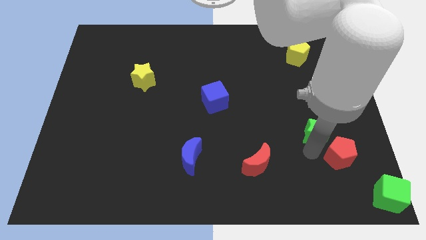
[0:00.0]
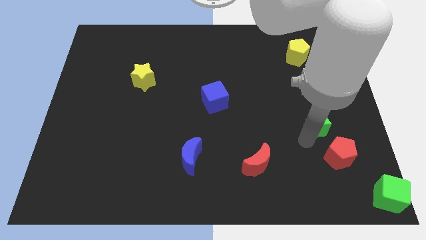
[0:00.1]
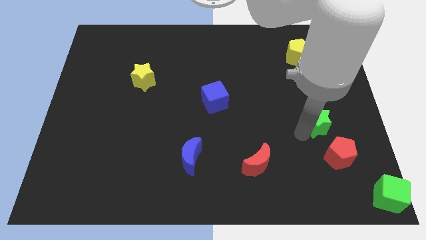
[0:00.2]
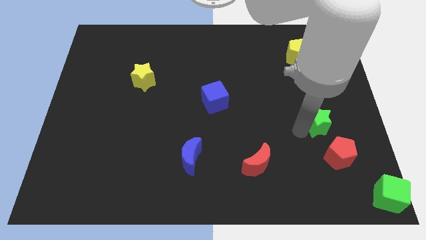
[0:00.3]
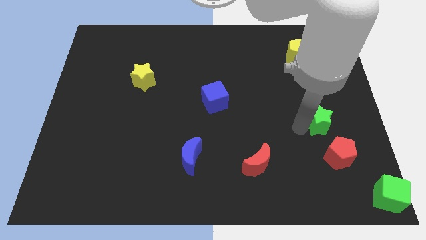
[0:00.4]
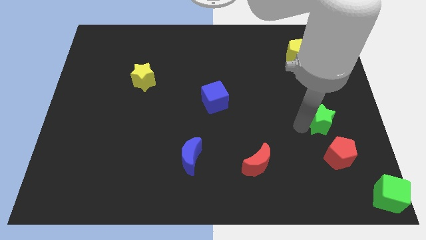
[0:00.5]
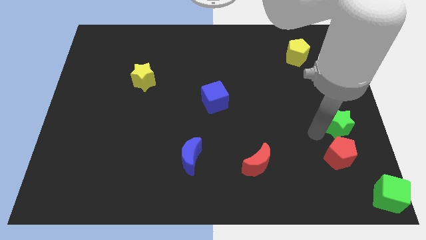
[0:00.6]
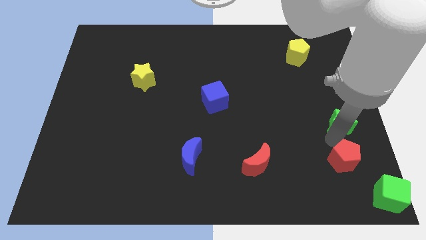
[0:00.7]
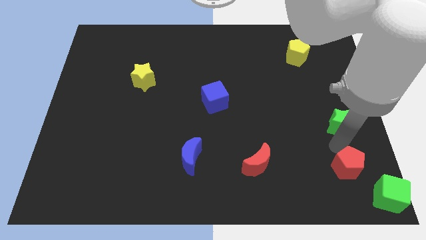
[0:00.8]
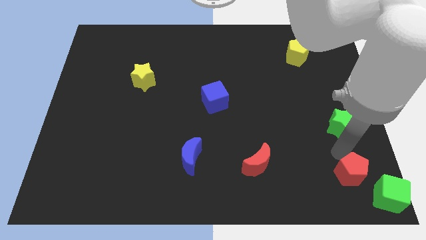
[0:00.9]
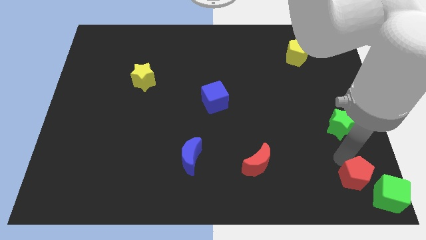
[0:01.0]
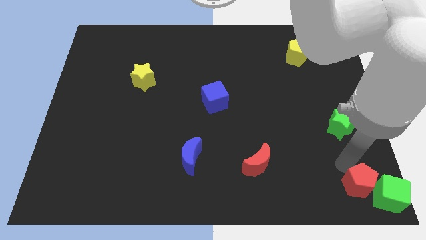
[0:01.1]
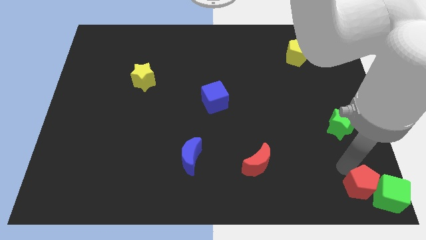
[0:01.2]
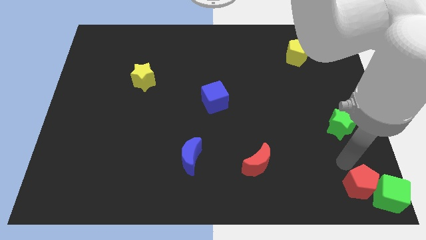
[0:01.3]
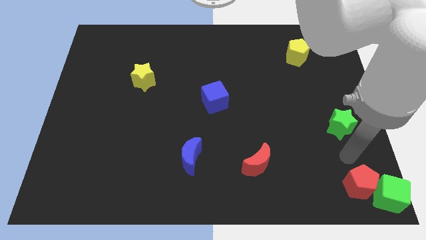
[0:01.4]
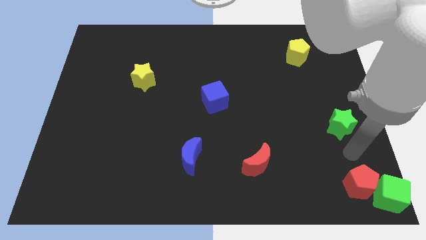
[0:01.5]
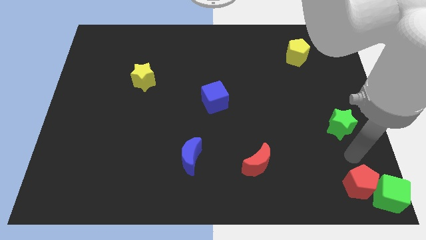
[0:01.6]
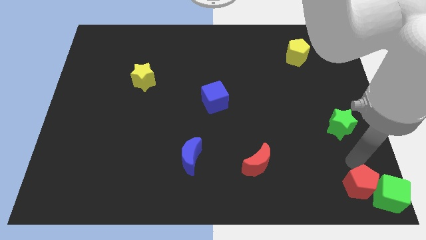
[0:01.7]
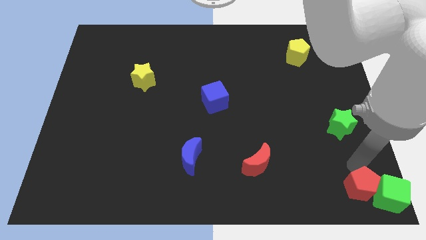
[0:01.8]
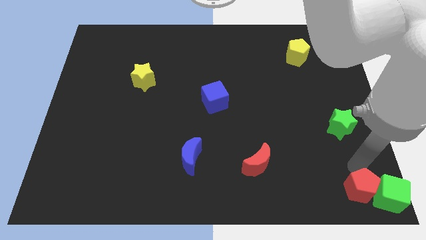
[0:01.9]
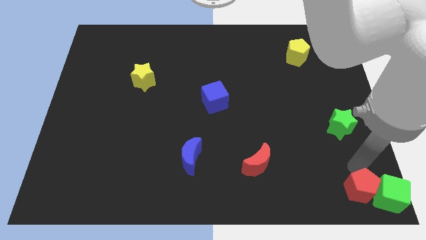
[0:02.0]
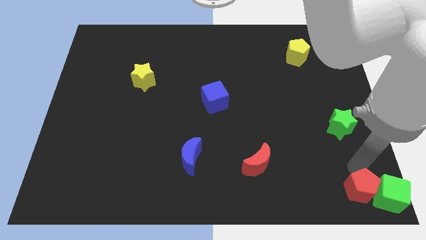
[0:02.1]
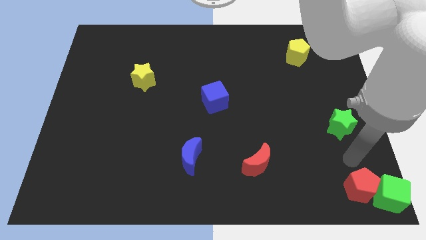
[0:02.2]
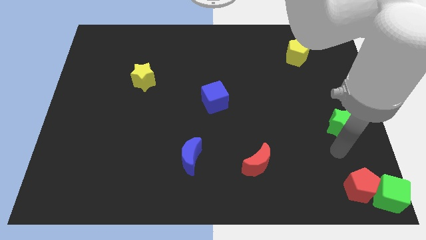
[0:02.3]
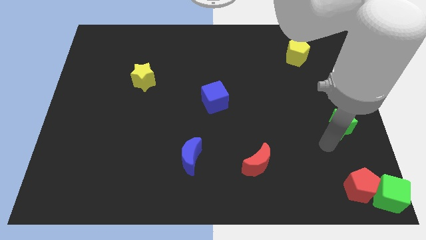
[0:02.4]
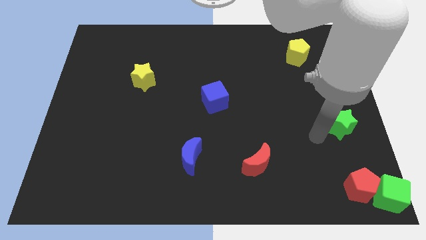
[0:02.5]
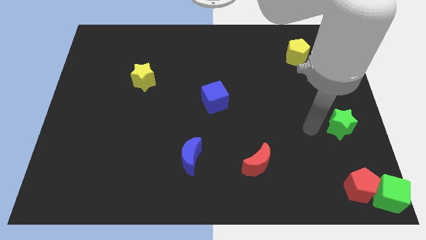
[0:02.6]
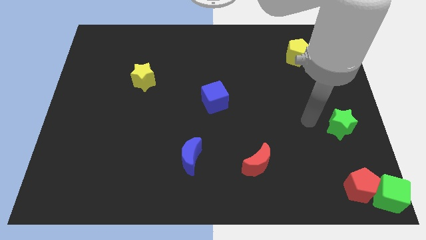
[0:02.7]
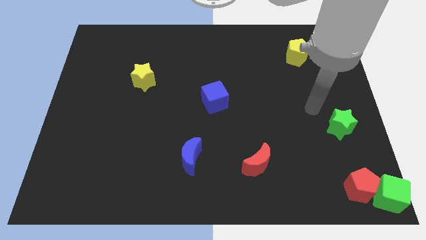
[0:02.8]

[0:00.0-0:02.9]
push the red pentagon to the left side of the green cube

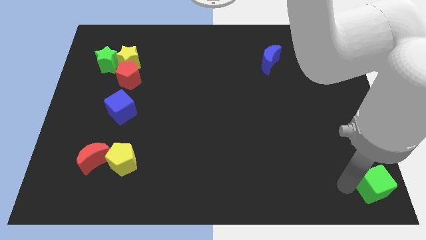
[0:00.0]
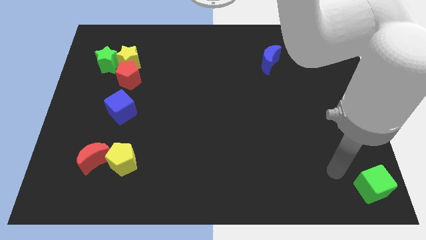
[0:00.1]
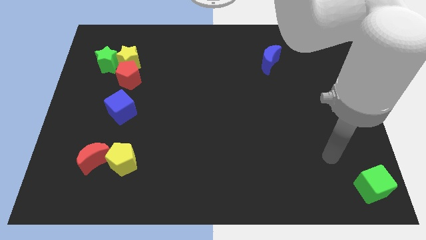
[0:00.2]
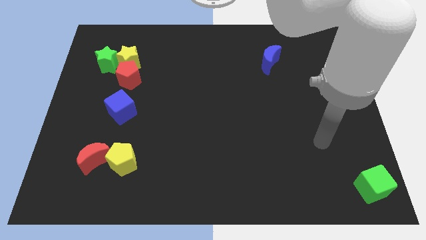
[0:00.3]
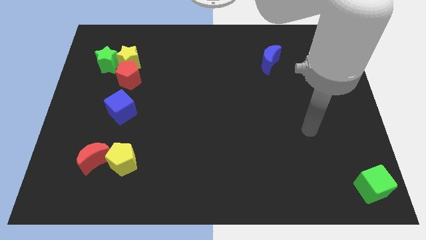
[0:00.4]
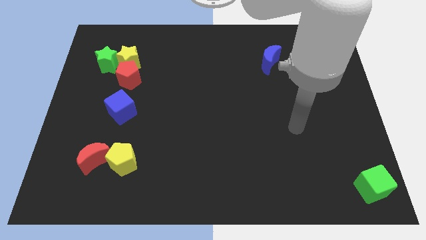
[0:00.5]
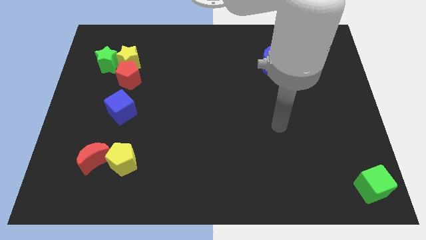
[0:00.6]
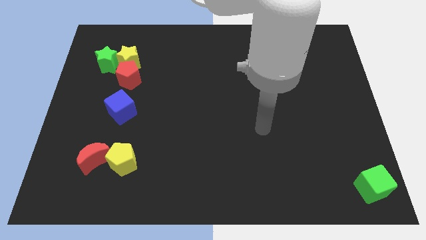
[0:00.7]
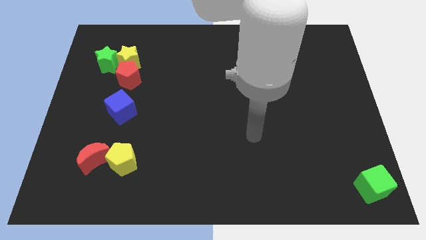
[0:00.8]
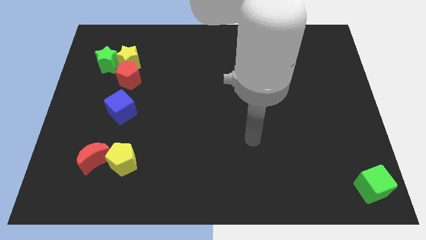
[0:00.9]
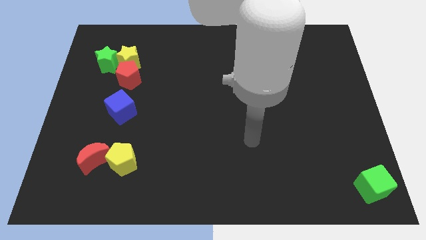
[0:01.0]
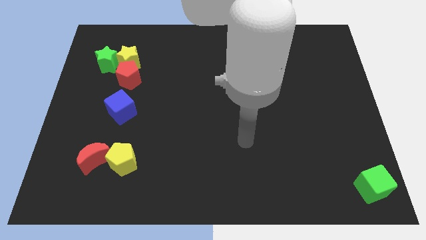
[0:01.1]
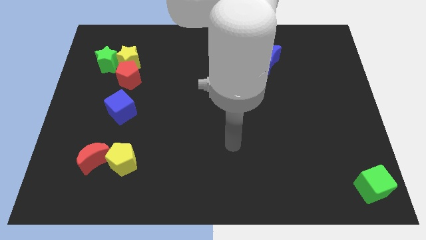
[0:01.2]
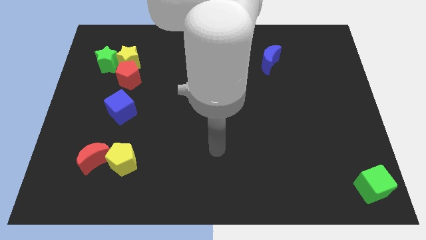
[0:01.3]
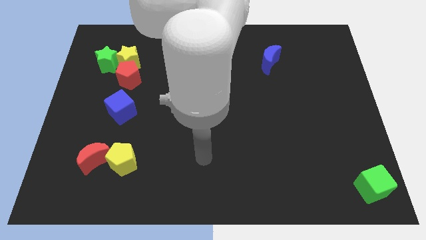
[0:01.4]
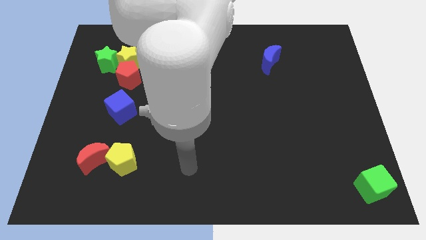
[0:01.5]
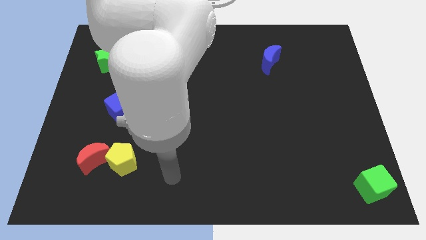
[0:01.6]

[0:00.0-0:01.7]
move the arm away from the green cube

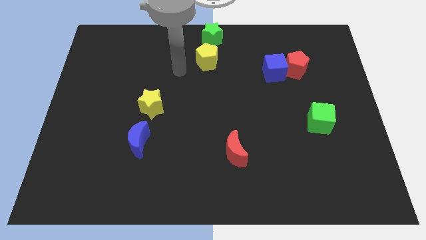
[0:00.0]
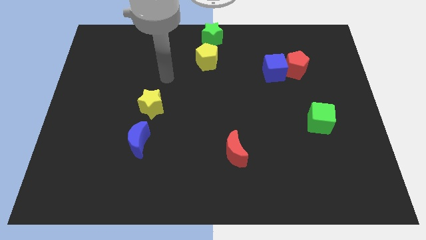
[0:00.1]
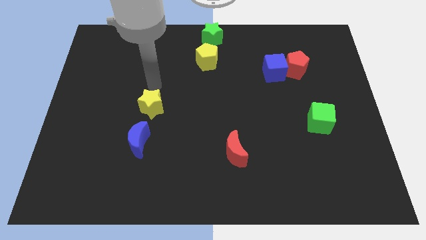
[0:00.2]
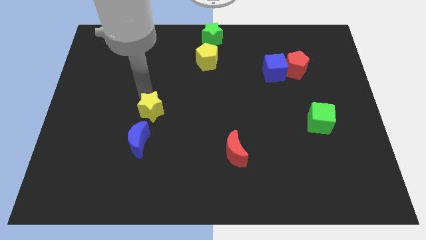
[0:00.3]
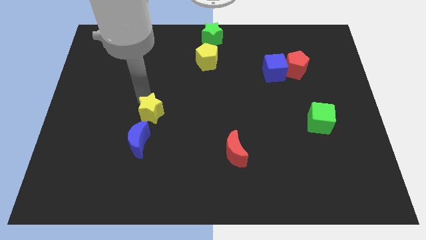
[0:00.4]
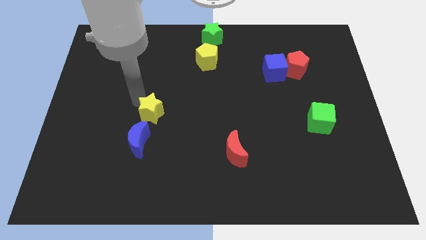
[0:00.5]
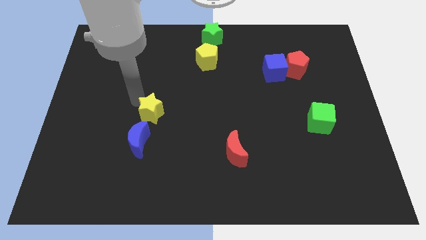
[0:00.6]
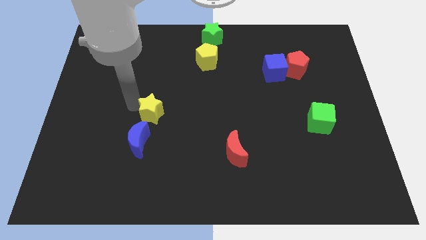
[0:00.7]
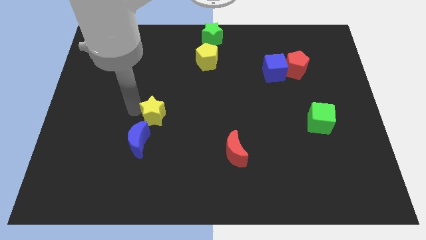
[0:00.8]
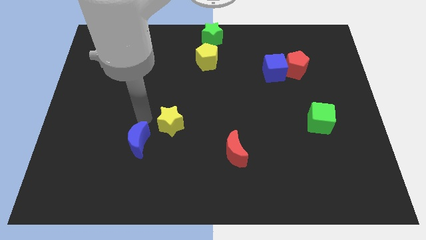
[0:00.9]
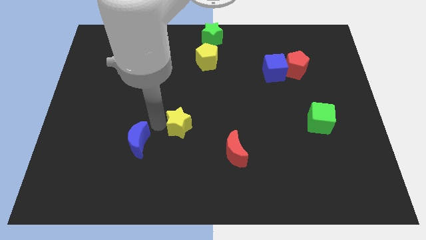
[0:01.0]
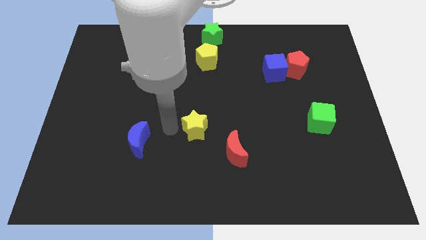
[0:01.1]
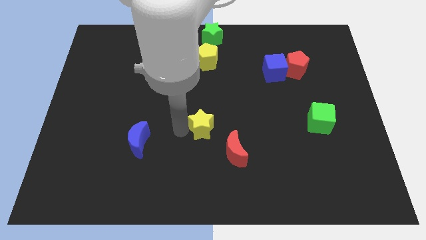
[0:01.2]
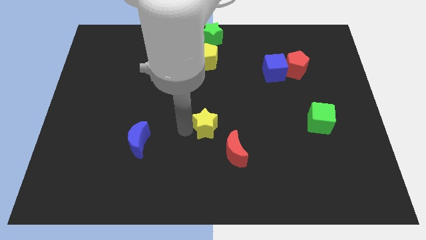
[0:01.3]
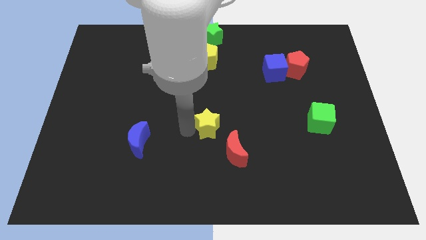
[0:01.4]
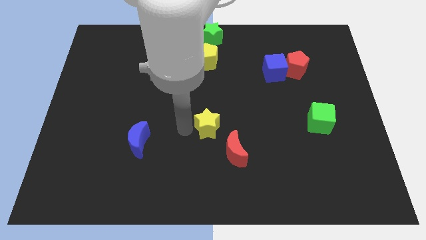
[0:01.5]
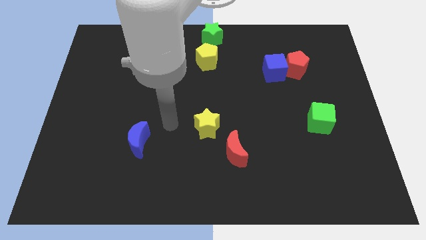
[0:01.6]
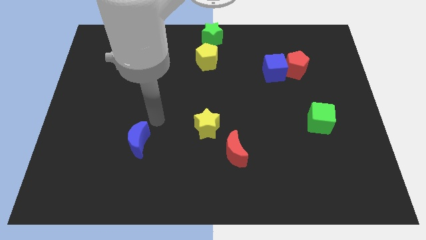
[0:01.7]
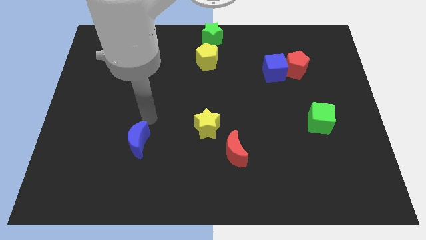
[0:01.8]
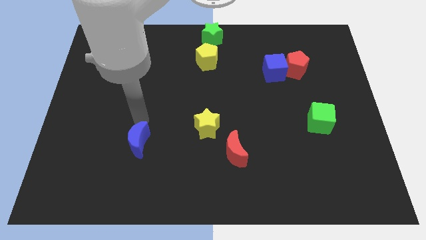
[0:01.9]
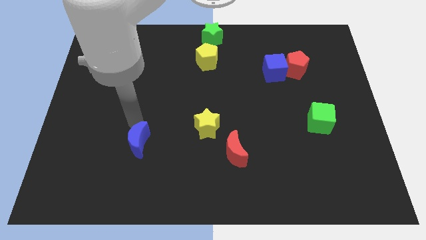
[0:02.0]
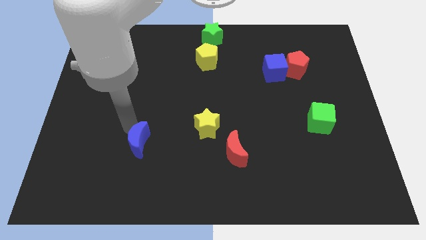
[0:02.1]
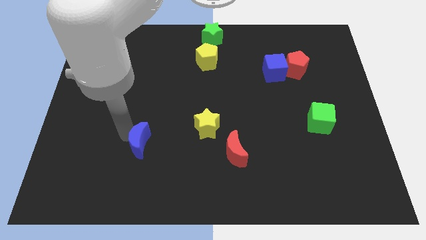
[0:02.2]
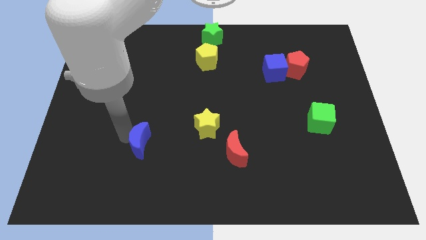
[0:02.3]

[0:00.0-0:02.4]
place the yellow star to the center

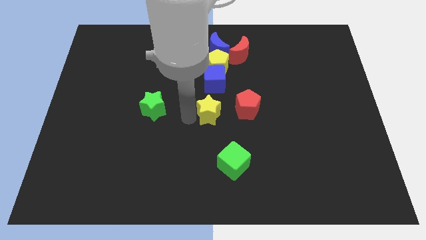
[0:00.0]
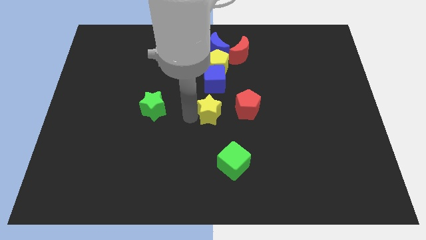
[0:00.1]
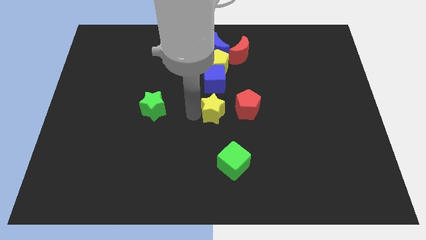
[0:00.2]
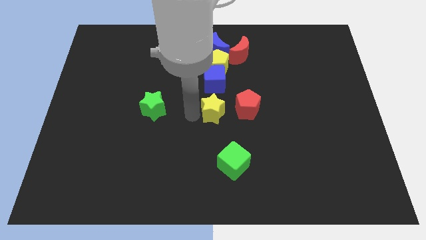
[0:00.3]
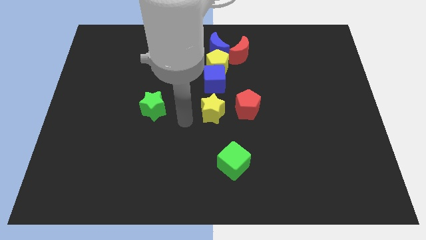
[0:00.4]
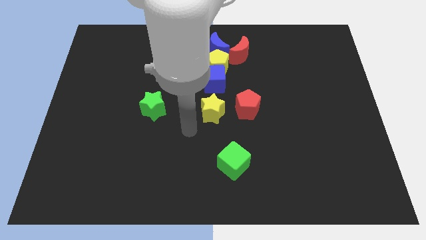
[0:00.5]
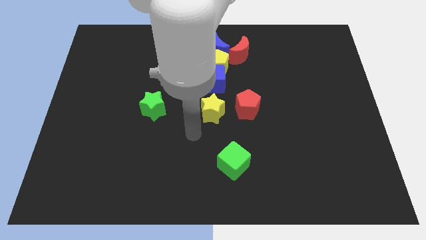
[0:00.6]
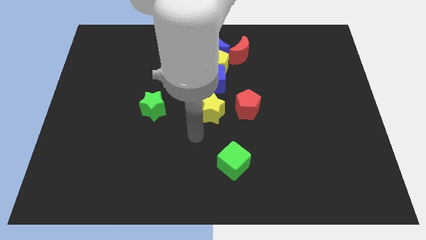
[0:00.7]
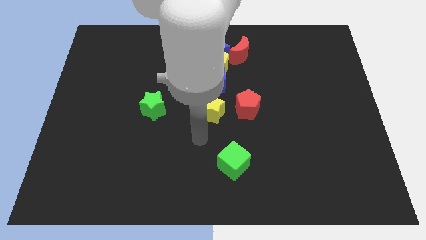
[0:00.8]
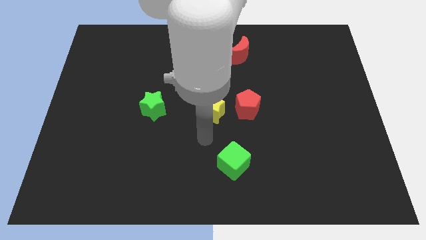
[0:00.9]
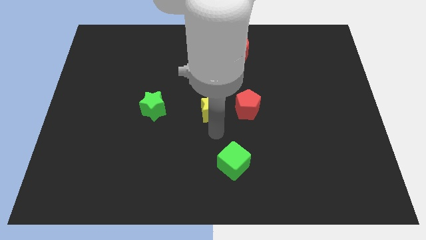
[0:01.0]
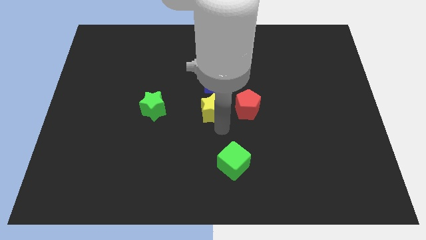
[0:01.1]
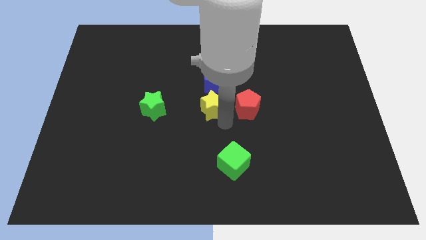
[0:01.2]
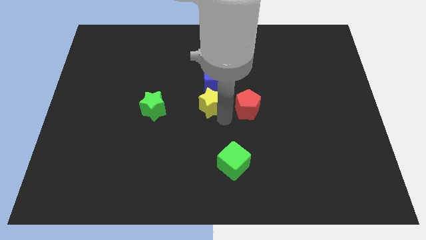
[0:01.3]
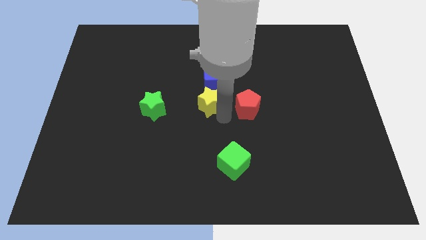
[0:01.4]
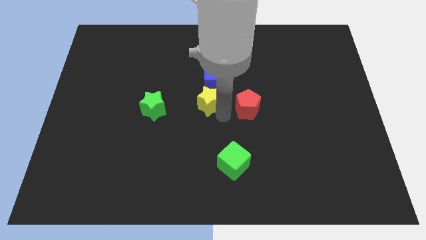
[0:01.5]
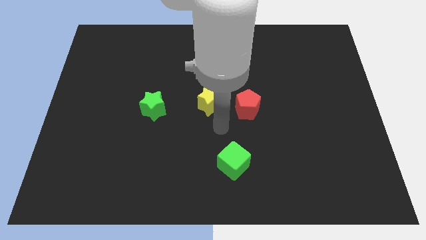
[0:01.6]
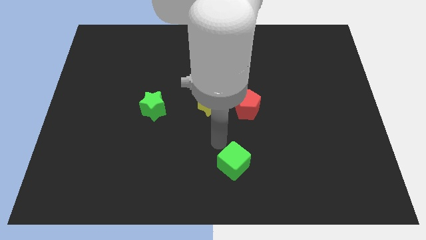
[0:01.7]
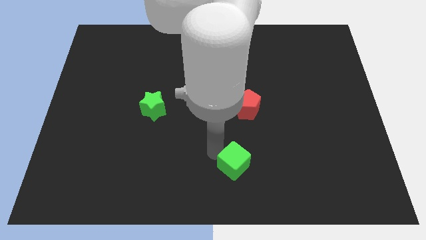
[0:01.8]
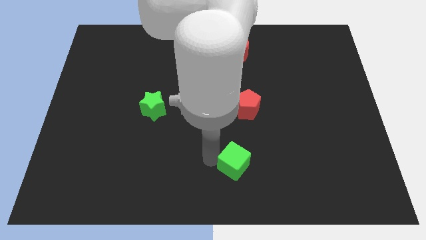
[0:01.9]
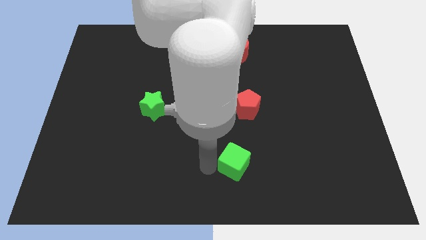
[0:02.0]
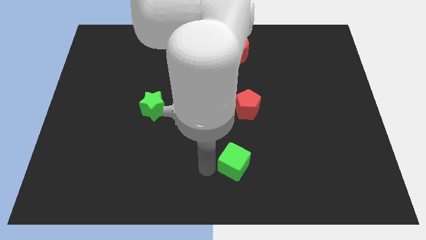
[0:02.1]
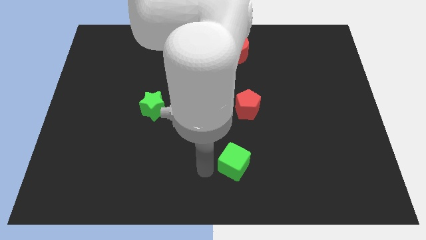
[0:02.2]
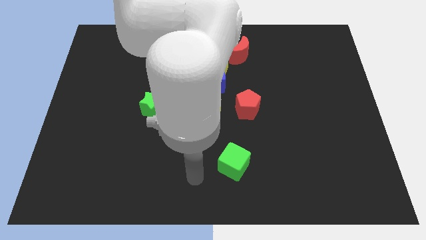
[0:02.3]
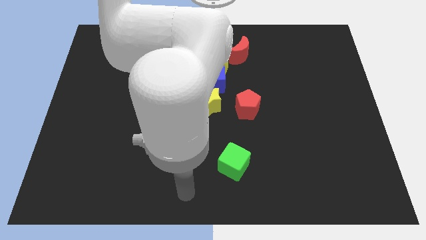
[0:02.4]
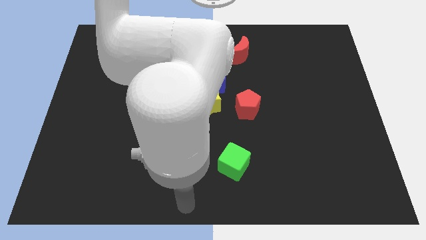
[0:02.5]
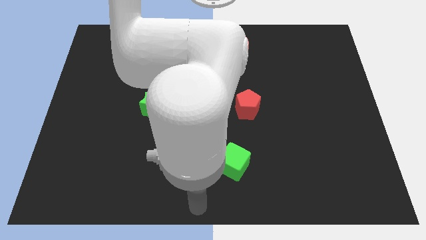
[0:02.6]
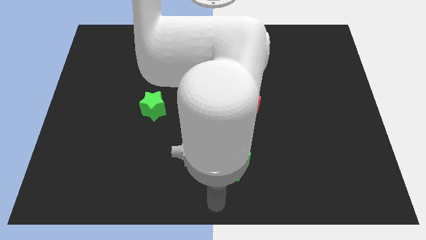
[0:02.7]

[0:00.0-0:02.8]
place yellow star below the blue cube
